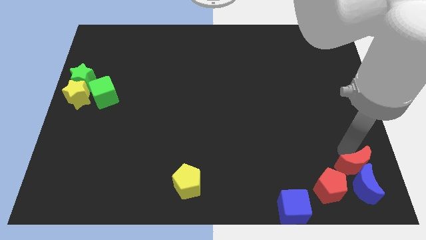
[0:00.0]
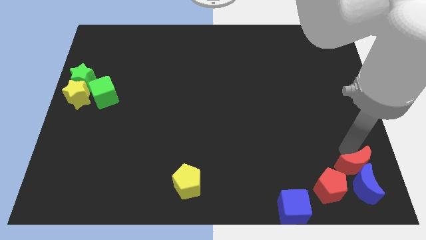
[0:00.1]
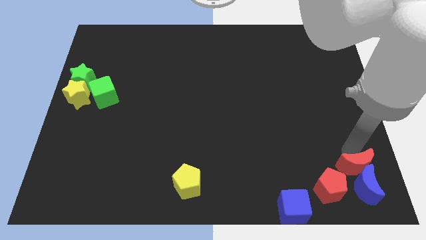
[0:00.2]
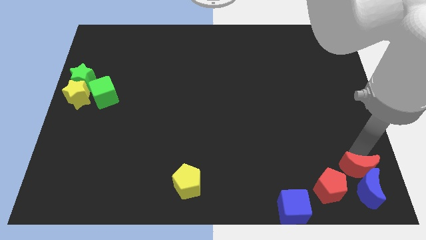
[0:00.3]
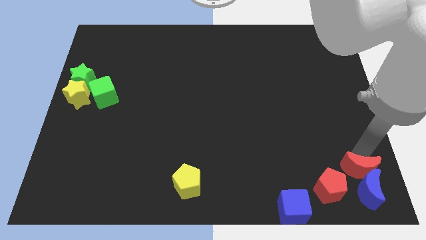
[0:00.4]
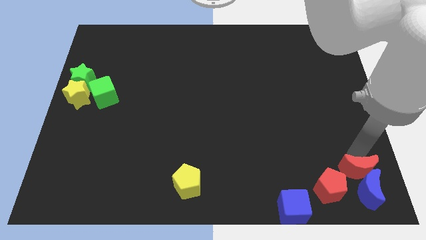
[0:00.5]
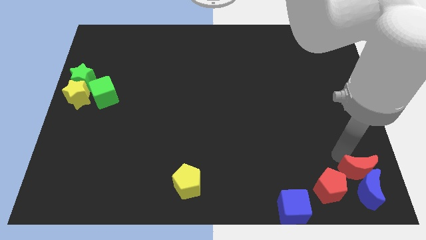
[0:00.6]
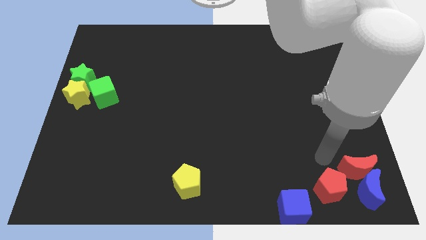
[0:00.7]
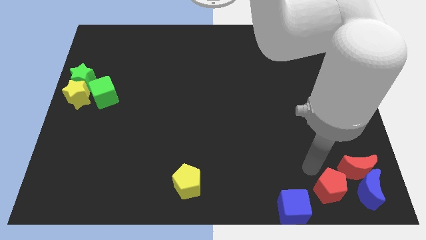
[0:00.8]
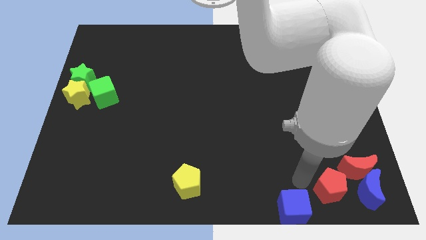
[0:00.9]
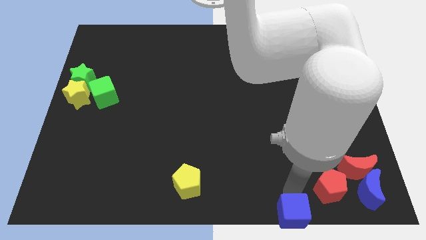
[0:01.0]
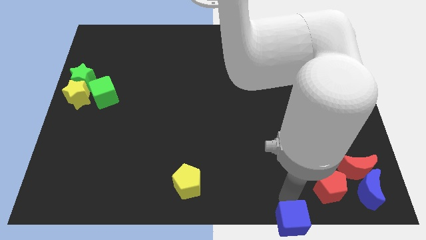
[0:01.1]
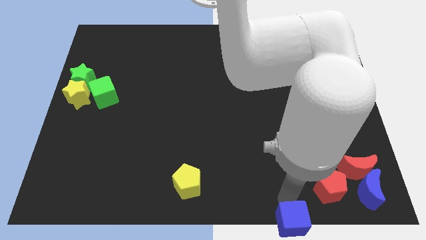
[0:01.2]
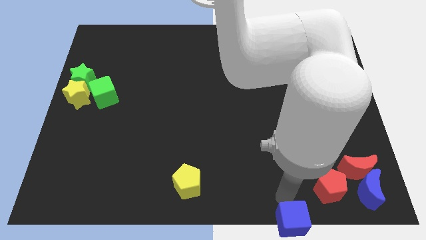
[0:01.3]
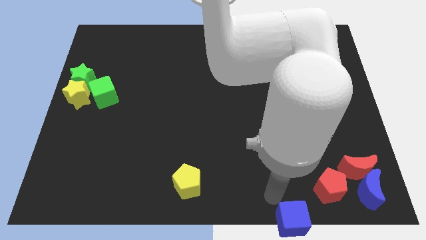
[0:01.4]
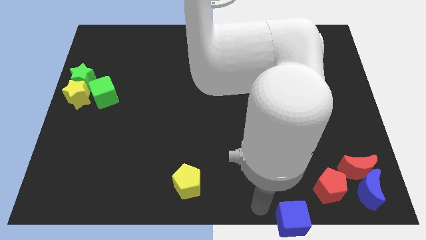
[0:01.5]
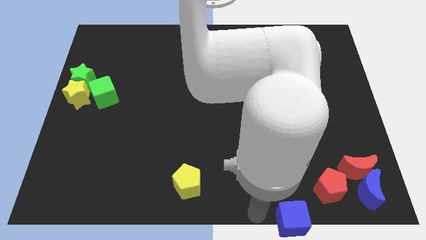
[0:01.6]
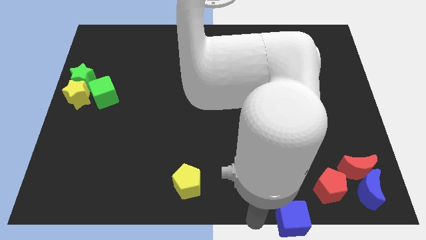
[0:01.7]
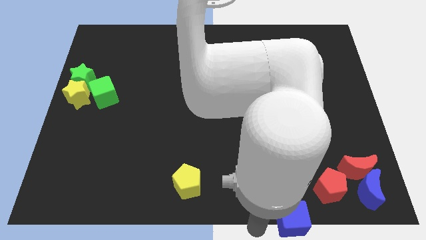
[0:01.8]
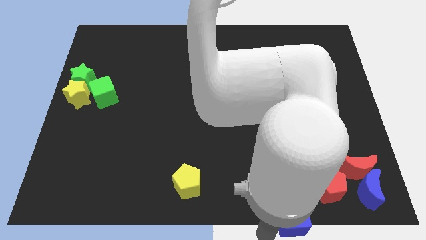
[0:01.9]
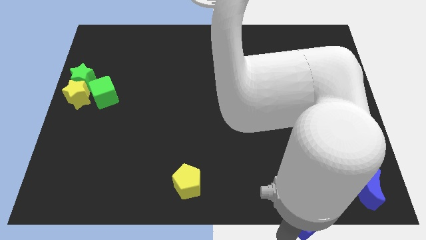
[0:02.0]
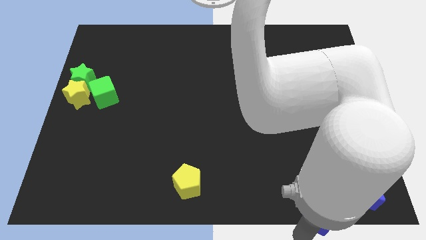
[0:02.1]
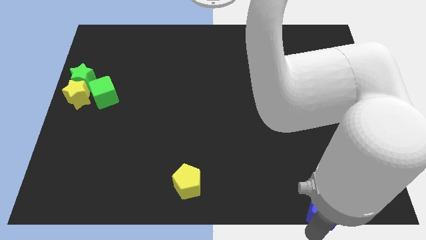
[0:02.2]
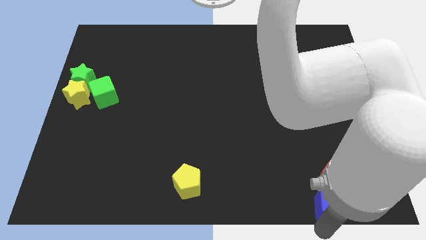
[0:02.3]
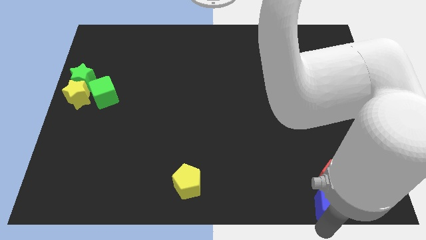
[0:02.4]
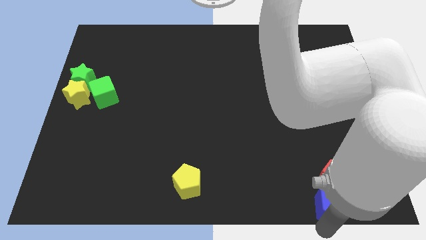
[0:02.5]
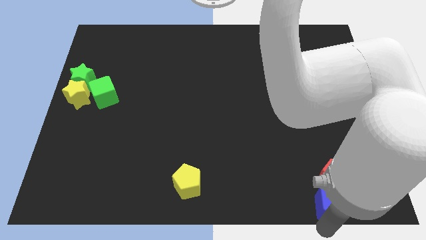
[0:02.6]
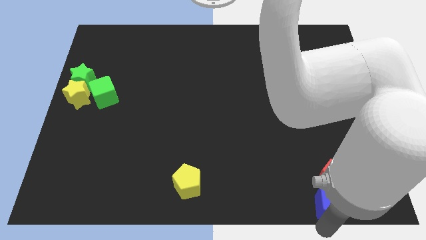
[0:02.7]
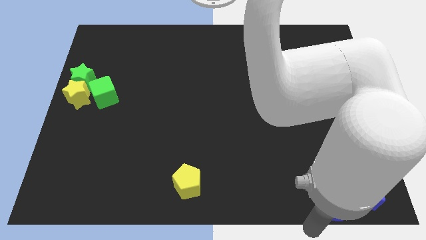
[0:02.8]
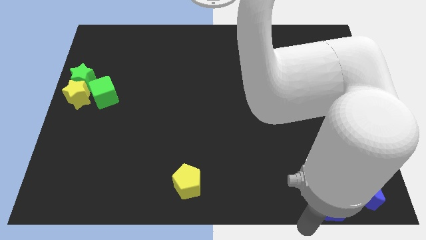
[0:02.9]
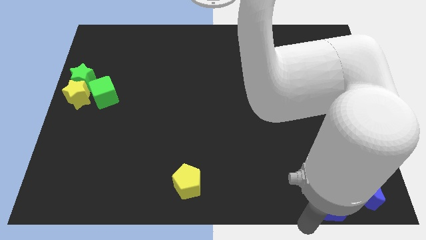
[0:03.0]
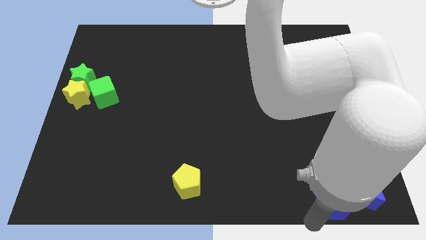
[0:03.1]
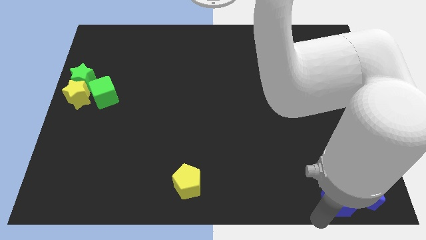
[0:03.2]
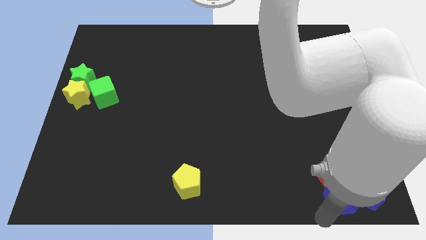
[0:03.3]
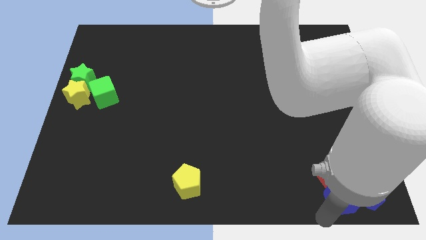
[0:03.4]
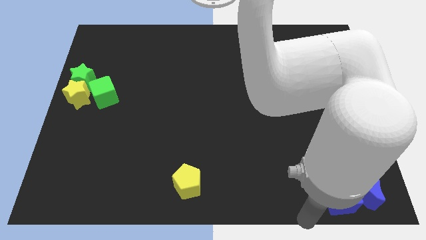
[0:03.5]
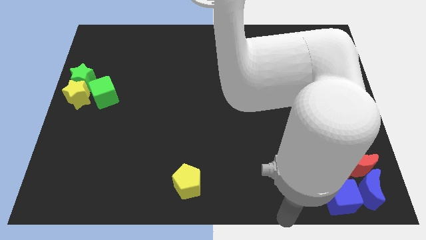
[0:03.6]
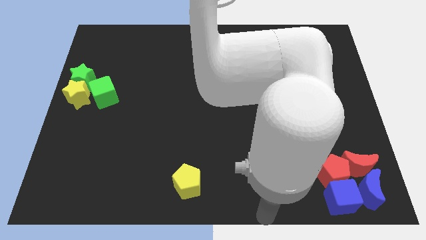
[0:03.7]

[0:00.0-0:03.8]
group up the blue blocks with the red blocks at the bottom right of the table

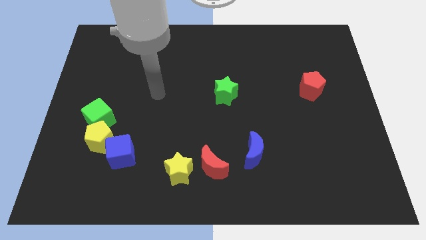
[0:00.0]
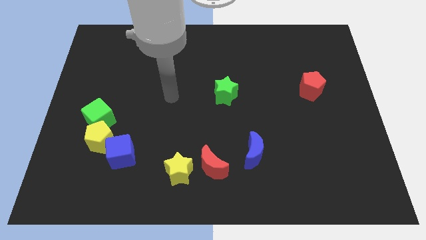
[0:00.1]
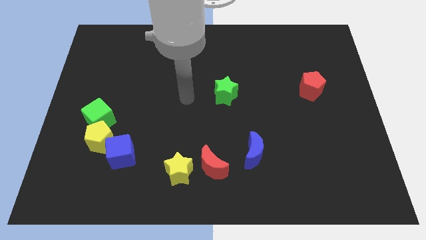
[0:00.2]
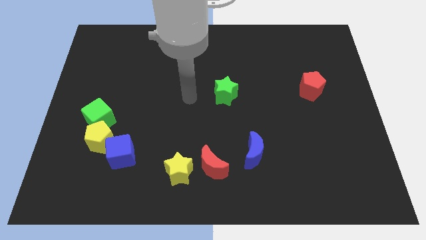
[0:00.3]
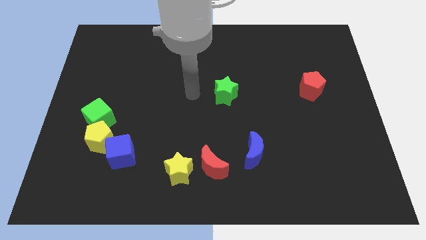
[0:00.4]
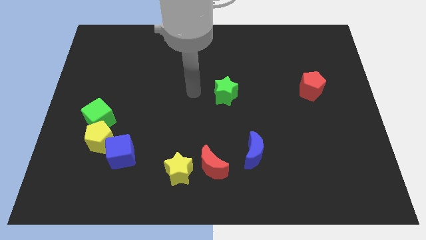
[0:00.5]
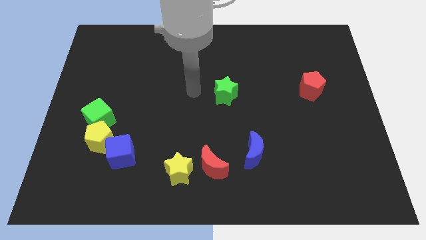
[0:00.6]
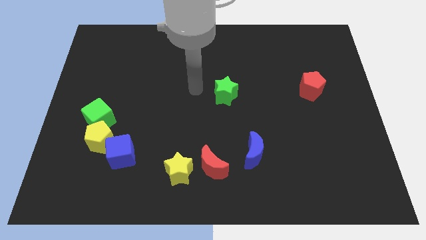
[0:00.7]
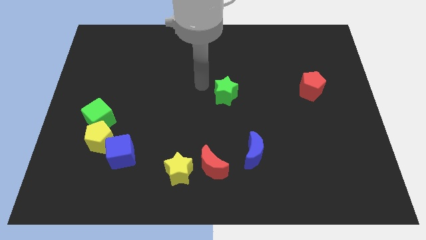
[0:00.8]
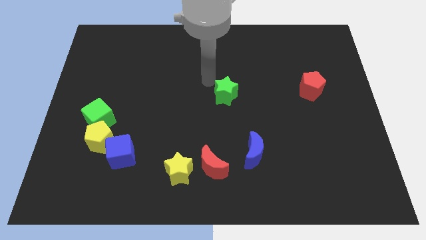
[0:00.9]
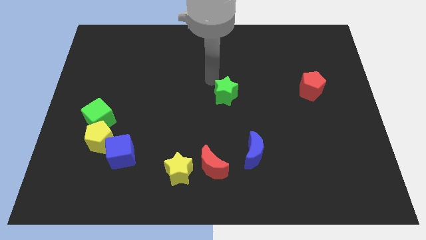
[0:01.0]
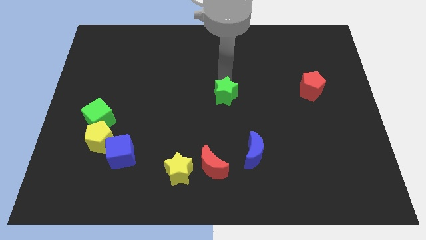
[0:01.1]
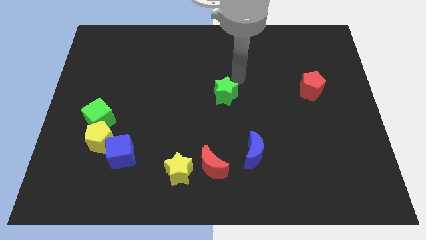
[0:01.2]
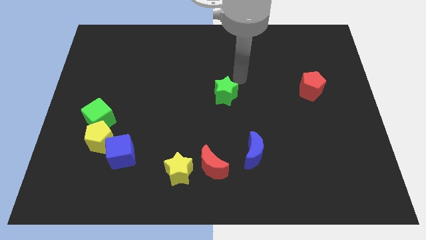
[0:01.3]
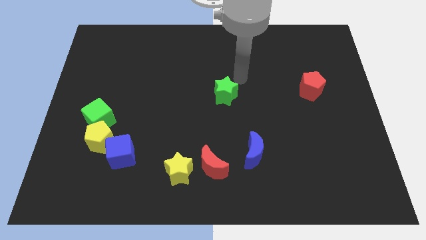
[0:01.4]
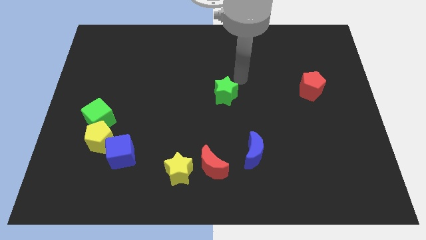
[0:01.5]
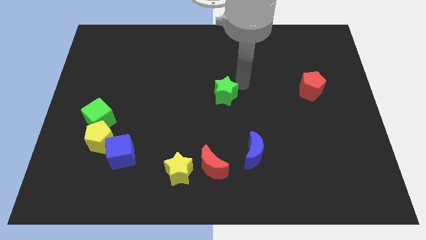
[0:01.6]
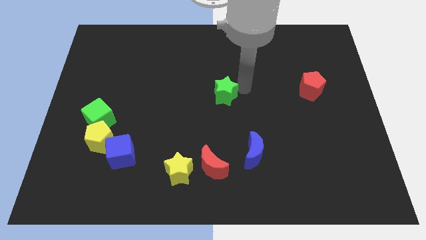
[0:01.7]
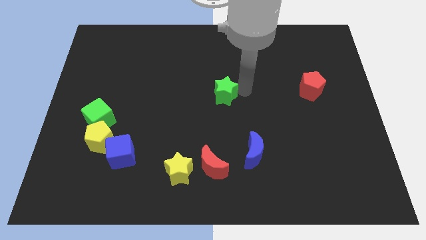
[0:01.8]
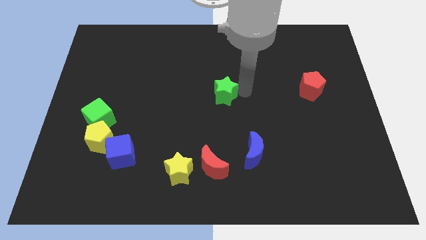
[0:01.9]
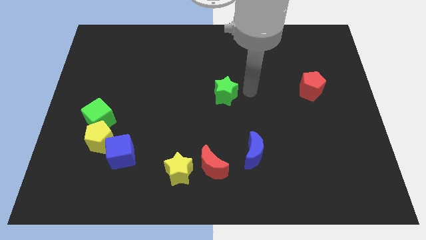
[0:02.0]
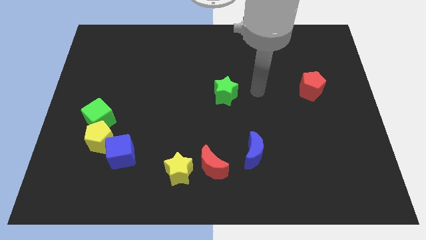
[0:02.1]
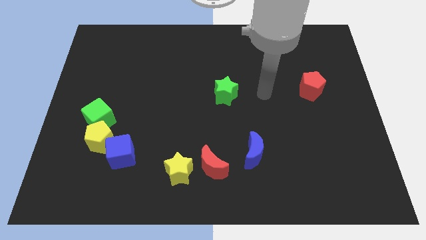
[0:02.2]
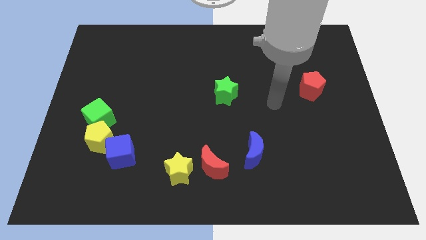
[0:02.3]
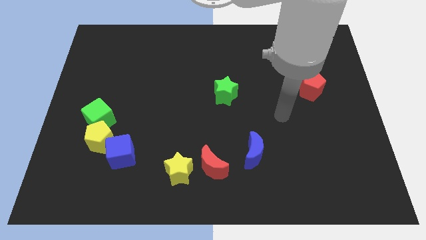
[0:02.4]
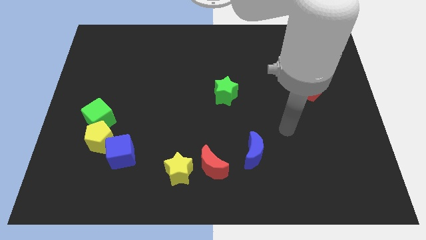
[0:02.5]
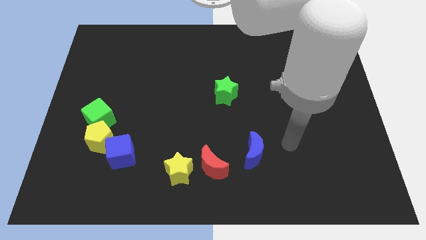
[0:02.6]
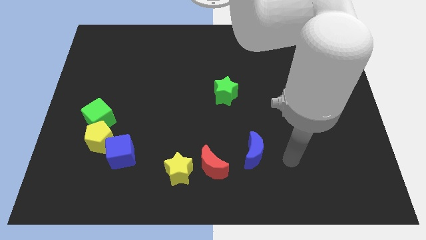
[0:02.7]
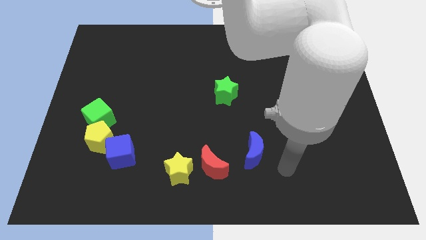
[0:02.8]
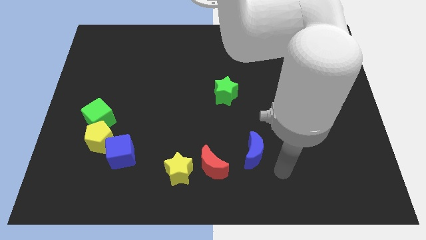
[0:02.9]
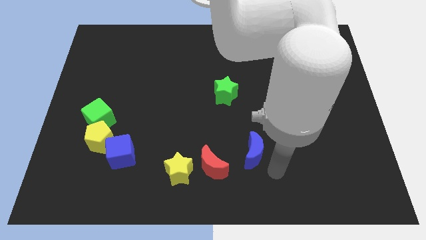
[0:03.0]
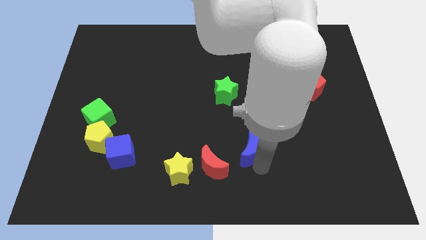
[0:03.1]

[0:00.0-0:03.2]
point the arm to the bottom right of the blue moon

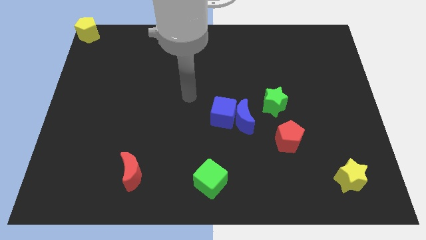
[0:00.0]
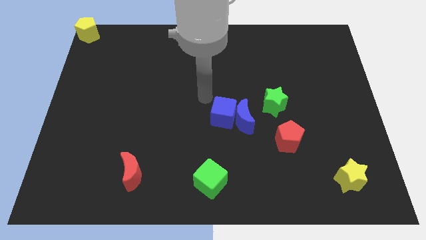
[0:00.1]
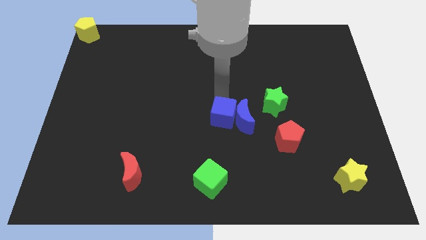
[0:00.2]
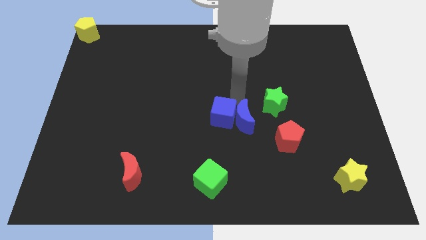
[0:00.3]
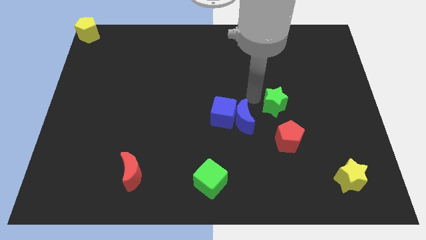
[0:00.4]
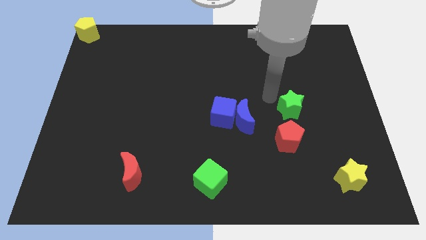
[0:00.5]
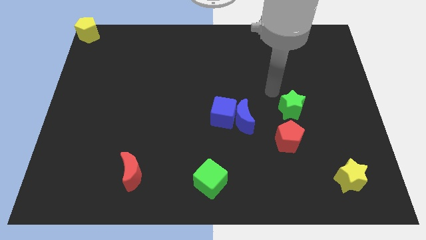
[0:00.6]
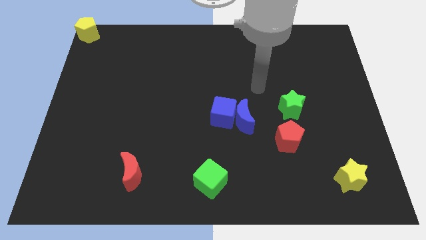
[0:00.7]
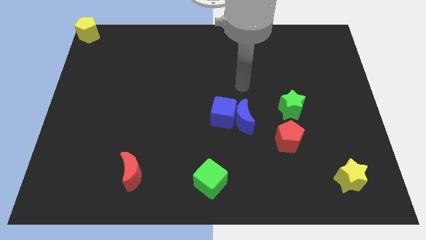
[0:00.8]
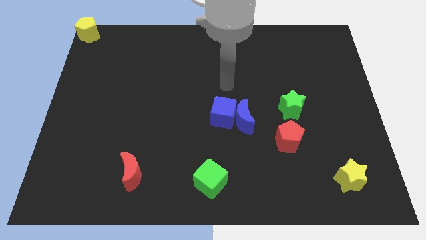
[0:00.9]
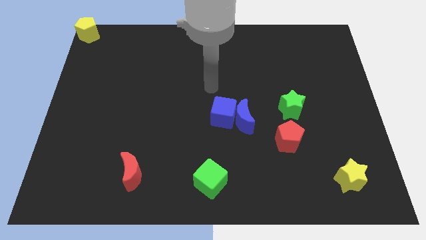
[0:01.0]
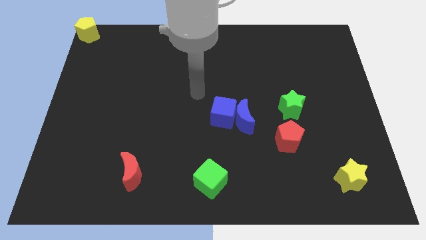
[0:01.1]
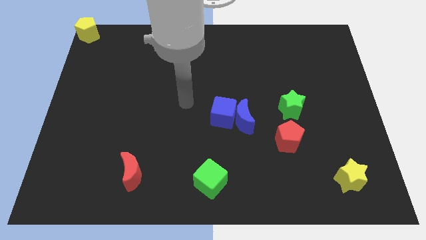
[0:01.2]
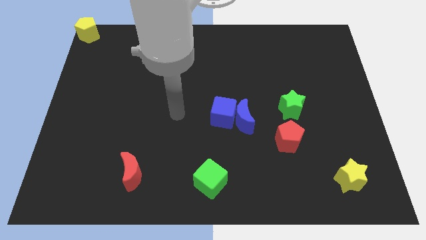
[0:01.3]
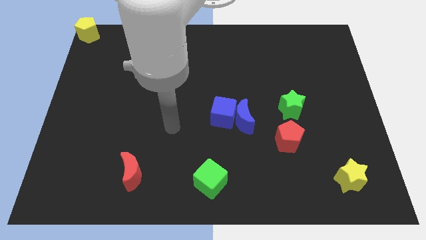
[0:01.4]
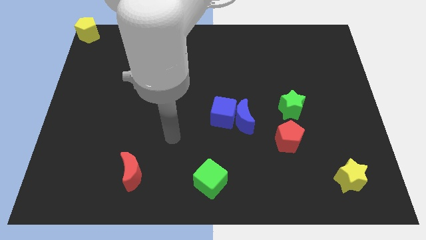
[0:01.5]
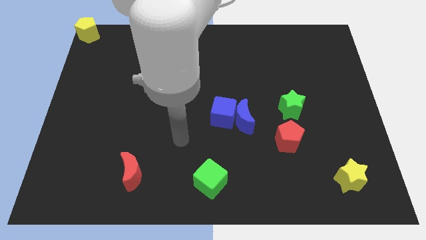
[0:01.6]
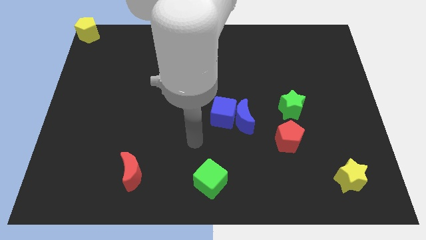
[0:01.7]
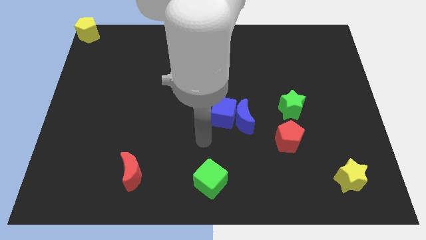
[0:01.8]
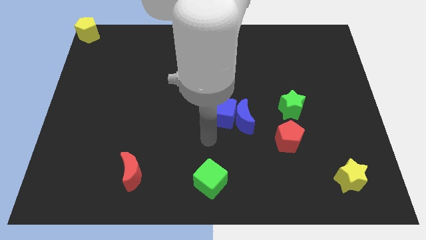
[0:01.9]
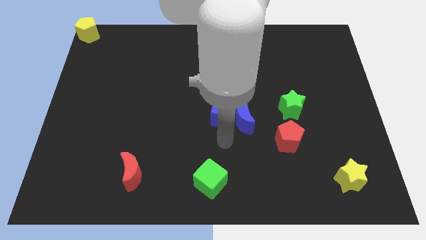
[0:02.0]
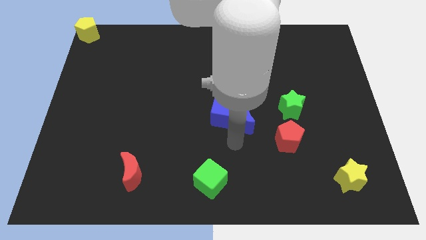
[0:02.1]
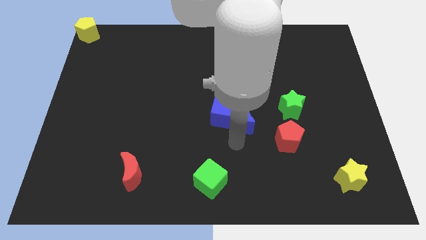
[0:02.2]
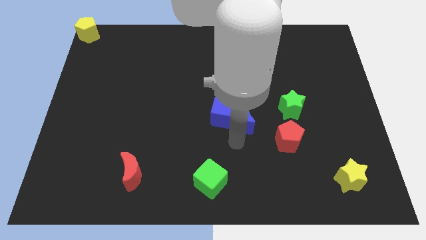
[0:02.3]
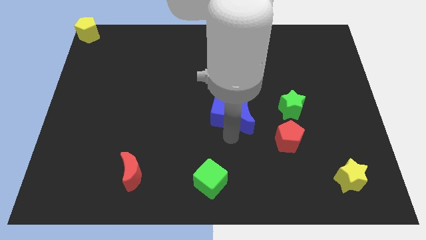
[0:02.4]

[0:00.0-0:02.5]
put the green star above the red pentagon and move away
